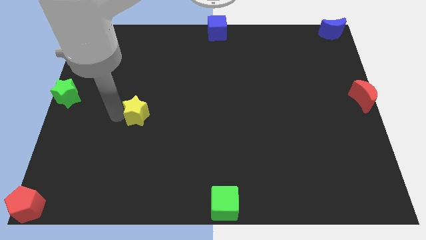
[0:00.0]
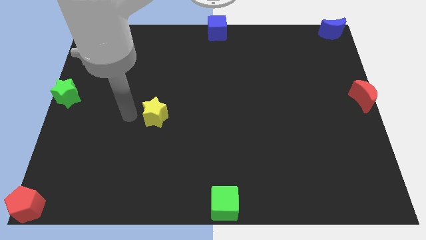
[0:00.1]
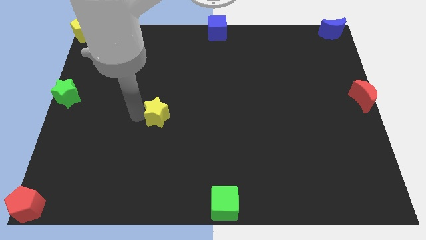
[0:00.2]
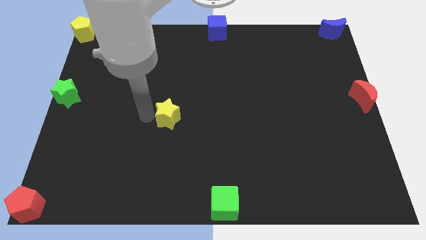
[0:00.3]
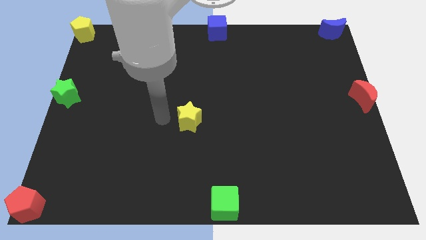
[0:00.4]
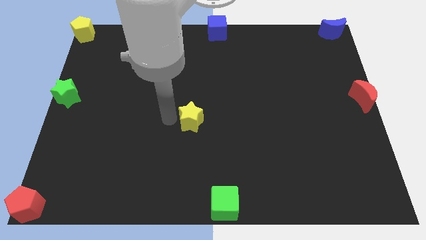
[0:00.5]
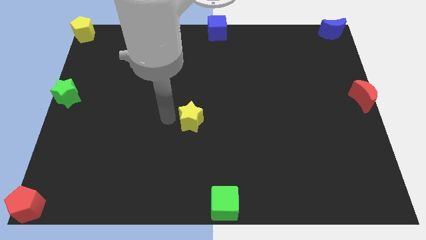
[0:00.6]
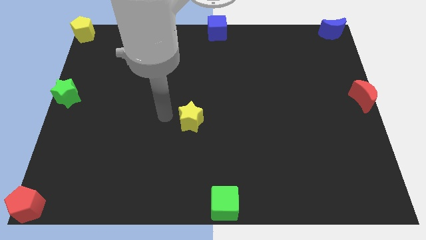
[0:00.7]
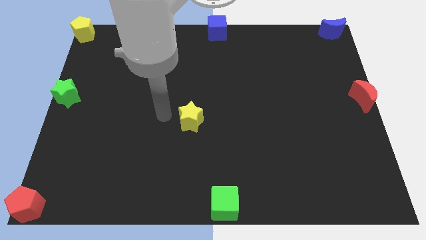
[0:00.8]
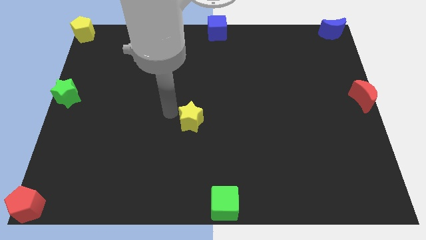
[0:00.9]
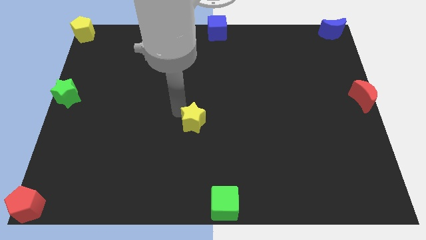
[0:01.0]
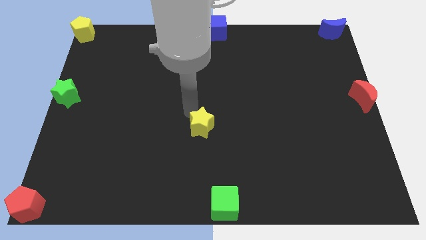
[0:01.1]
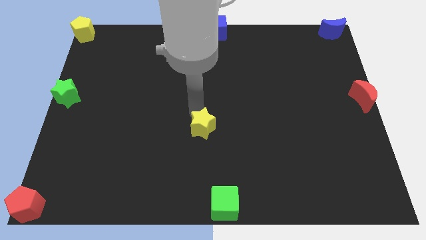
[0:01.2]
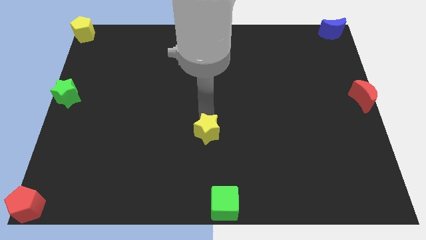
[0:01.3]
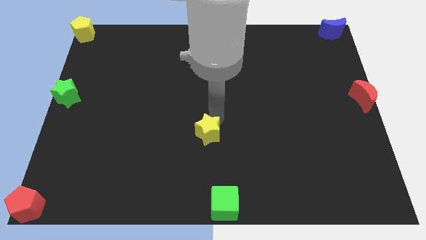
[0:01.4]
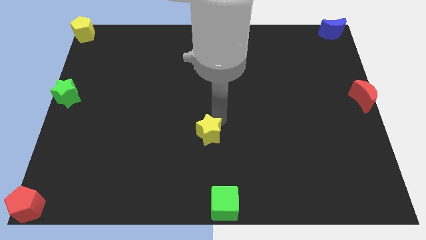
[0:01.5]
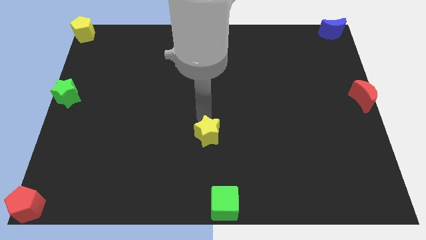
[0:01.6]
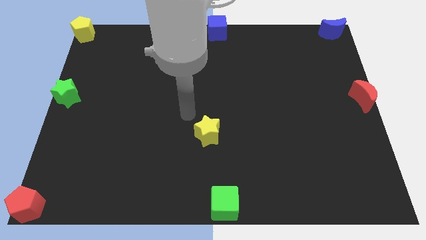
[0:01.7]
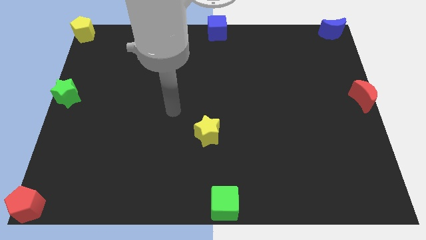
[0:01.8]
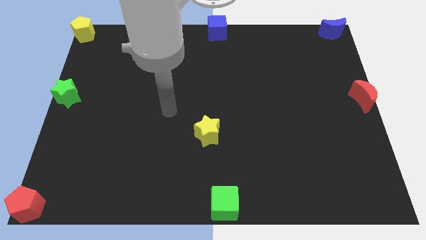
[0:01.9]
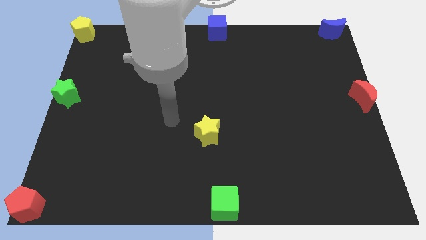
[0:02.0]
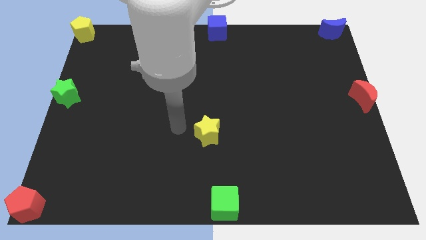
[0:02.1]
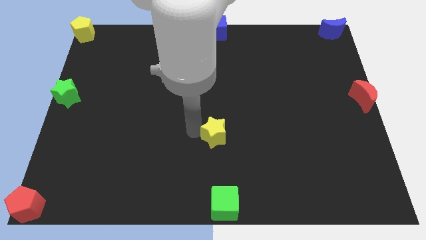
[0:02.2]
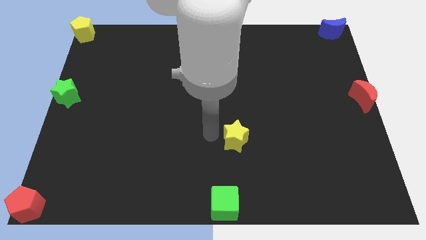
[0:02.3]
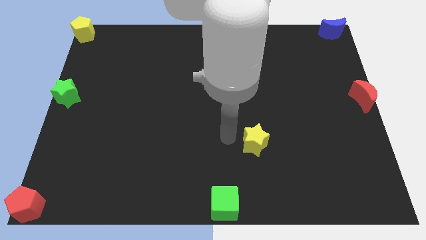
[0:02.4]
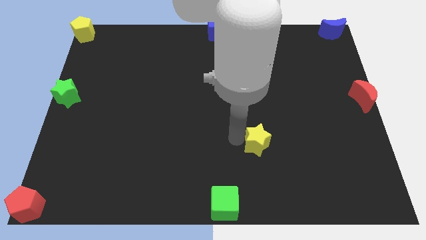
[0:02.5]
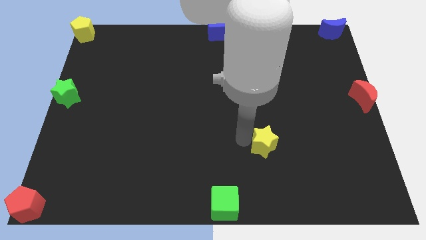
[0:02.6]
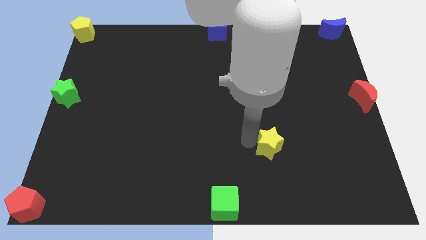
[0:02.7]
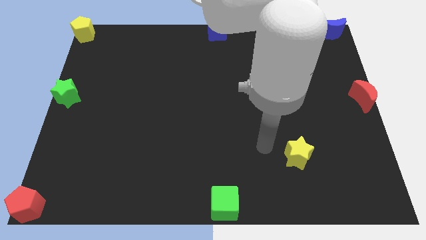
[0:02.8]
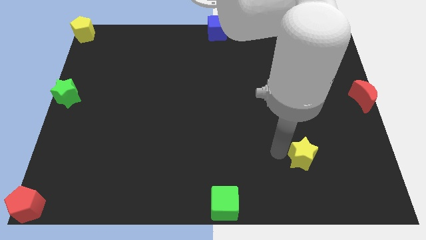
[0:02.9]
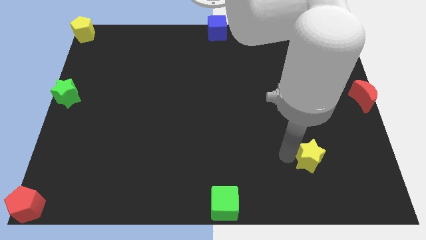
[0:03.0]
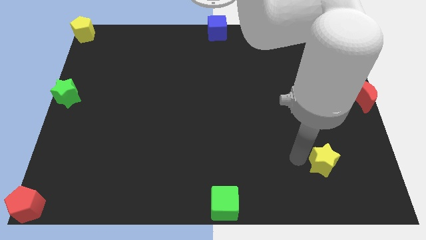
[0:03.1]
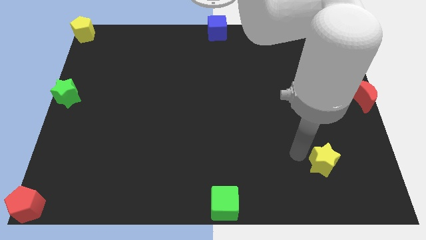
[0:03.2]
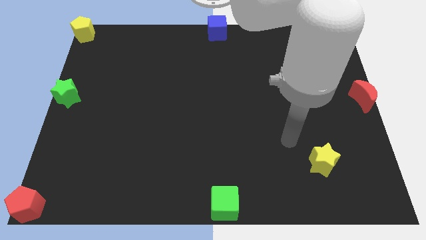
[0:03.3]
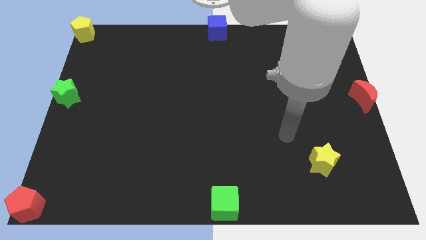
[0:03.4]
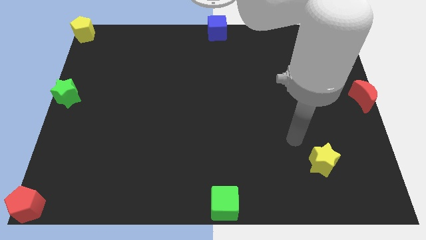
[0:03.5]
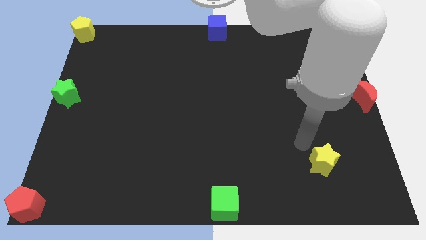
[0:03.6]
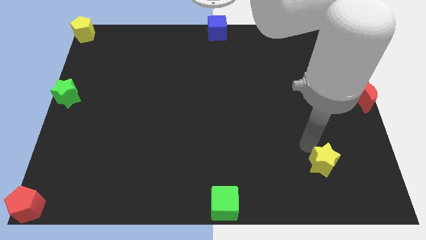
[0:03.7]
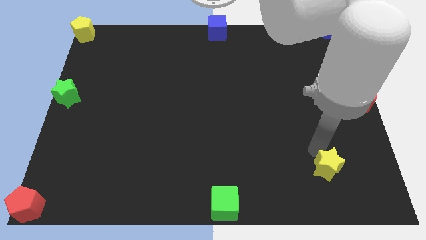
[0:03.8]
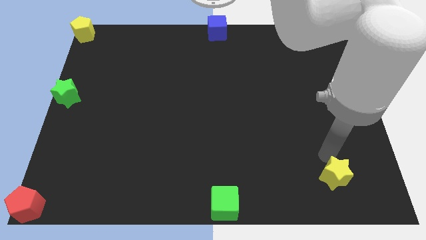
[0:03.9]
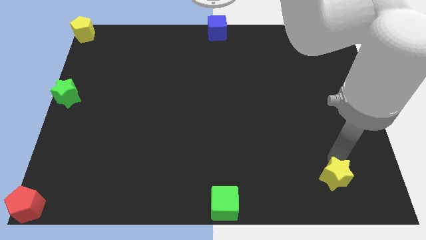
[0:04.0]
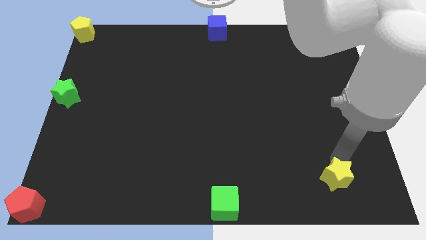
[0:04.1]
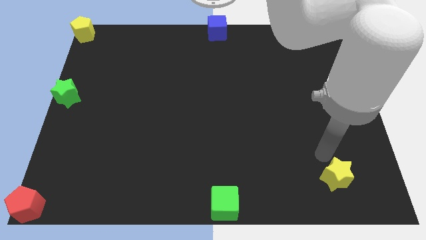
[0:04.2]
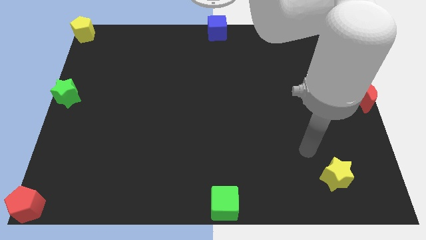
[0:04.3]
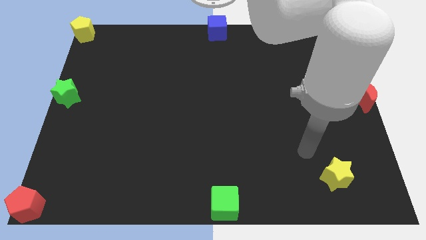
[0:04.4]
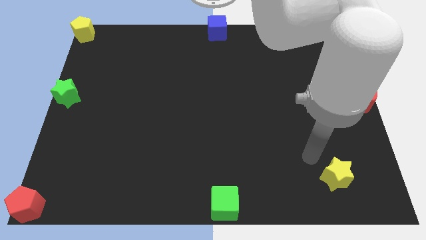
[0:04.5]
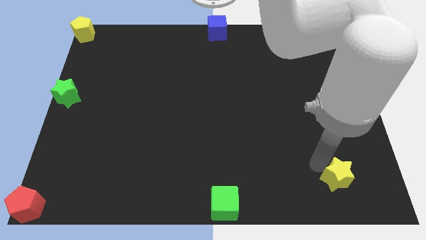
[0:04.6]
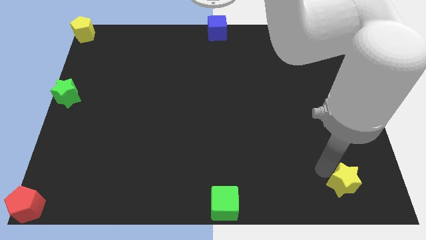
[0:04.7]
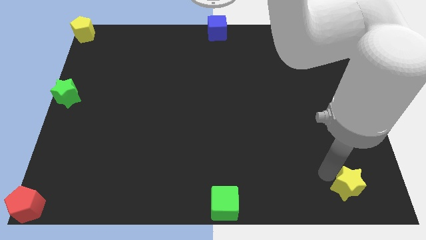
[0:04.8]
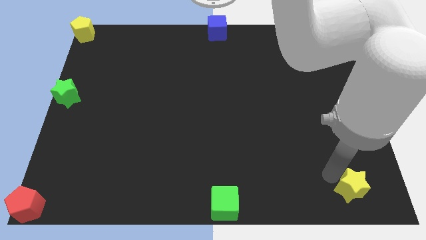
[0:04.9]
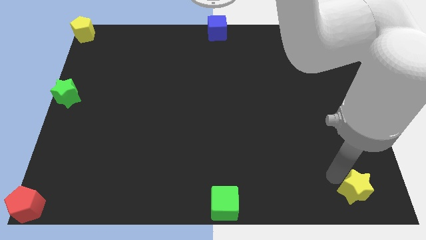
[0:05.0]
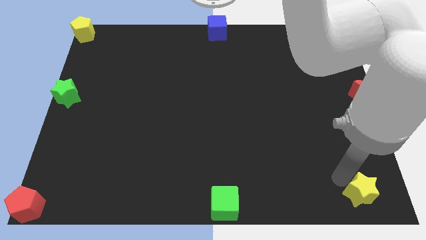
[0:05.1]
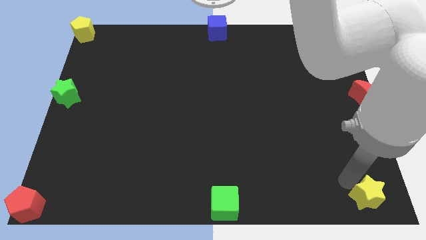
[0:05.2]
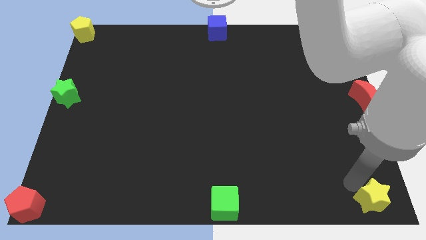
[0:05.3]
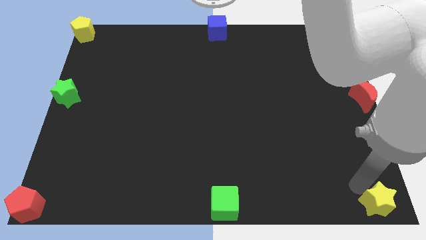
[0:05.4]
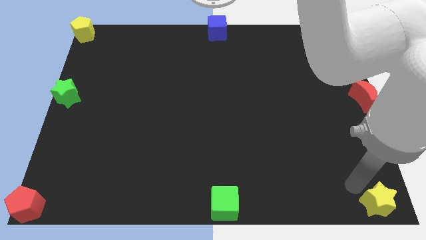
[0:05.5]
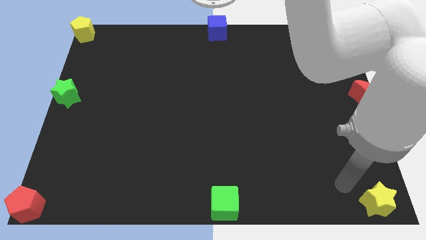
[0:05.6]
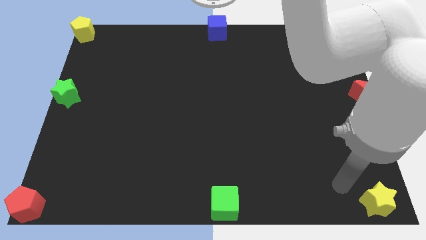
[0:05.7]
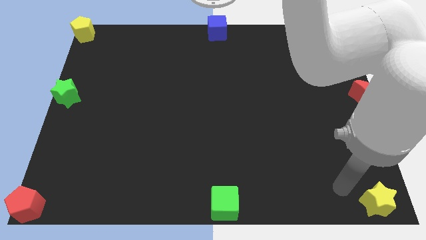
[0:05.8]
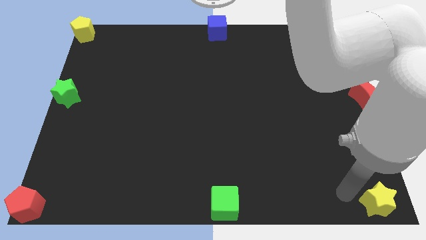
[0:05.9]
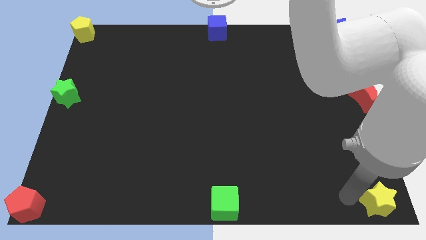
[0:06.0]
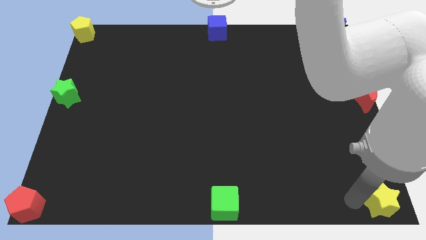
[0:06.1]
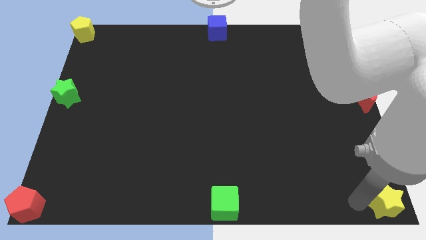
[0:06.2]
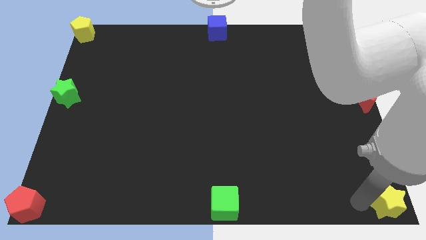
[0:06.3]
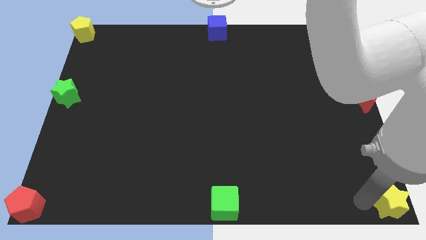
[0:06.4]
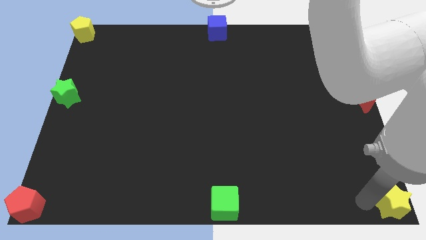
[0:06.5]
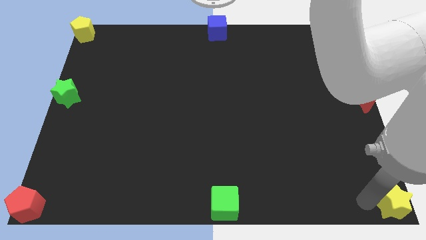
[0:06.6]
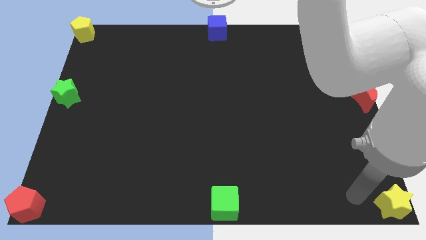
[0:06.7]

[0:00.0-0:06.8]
move the yellow star on the right bottom corner of the board

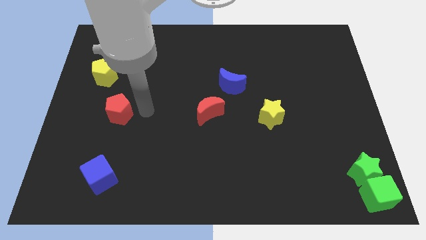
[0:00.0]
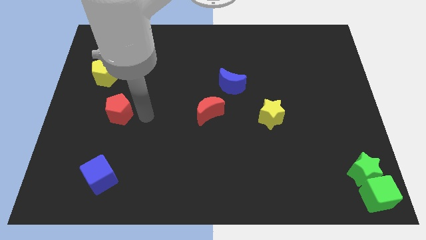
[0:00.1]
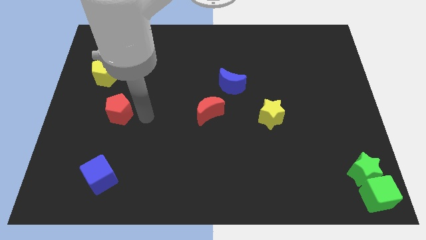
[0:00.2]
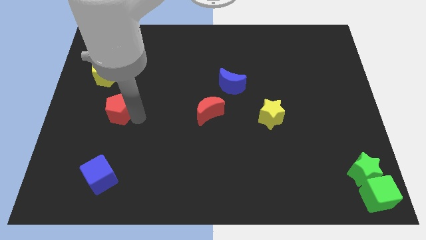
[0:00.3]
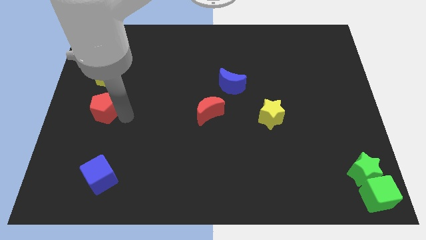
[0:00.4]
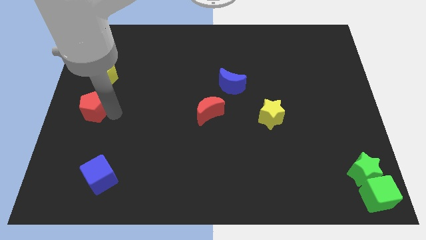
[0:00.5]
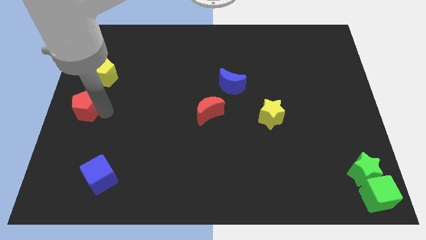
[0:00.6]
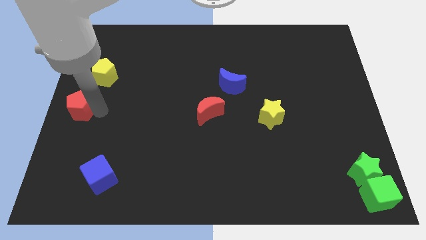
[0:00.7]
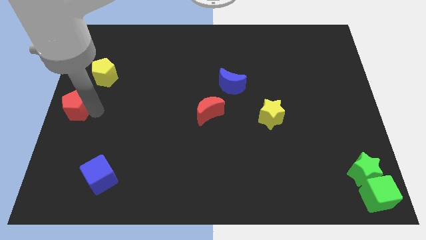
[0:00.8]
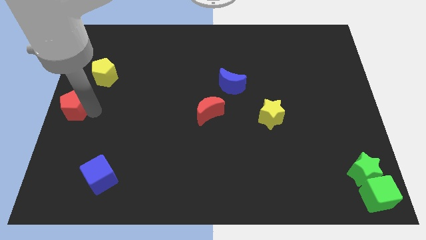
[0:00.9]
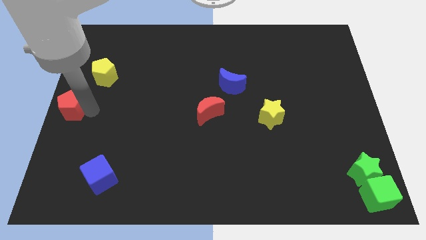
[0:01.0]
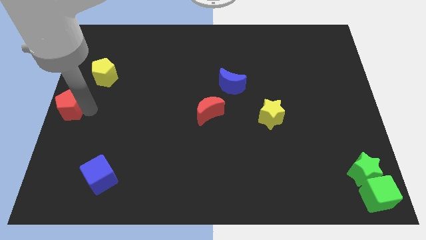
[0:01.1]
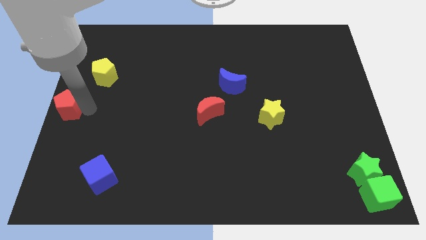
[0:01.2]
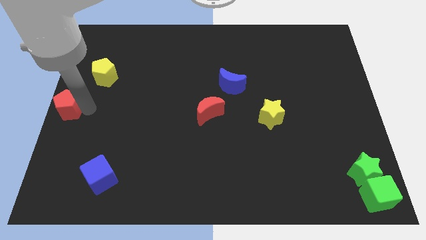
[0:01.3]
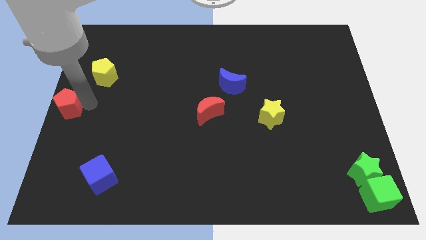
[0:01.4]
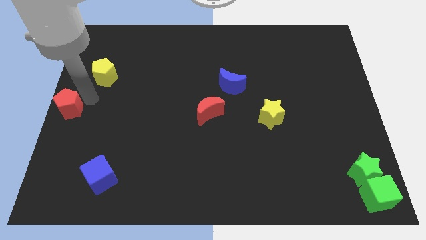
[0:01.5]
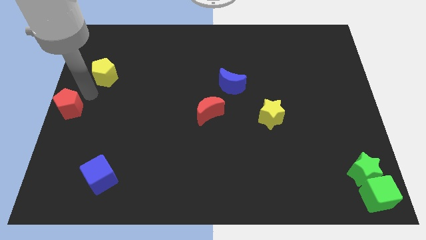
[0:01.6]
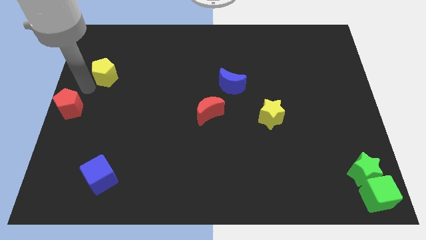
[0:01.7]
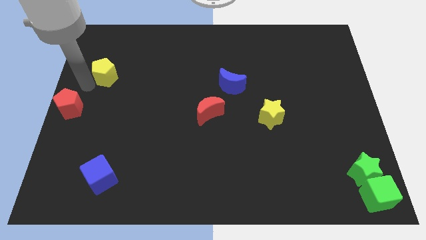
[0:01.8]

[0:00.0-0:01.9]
move the red pentagon to the left center of the board

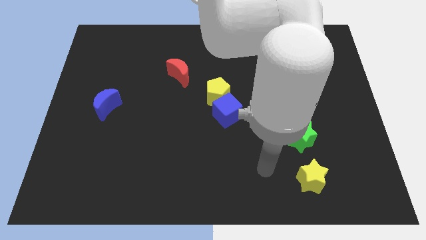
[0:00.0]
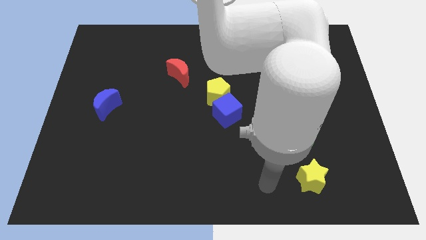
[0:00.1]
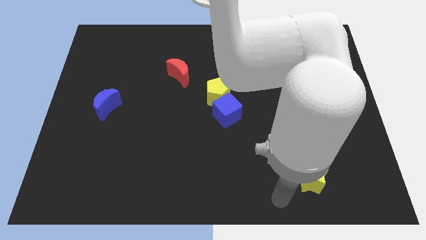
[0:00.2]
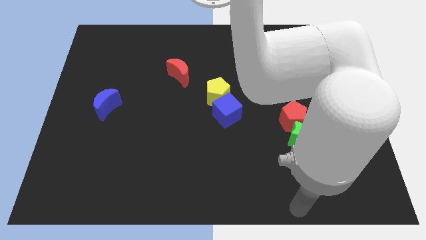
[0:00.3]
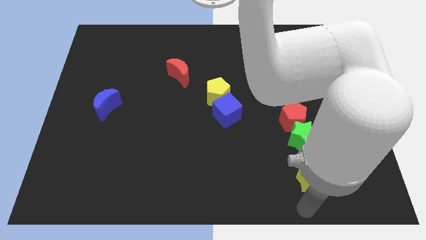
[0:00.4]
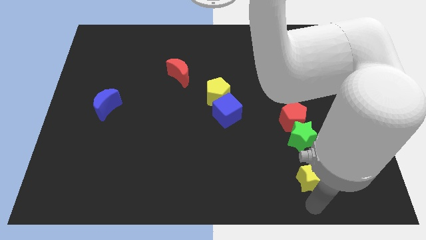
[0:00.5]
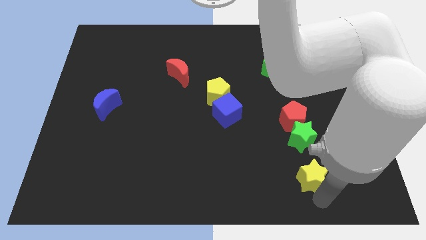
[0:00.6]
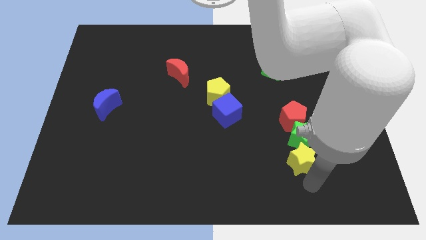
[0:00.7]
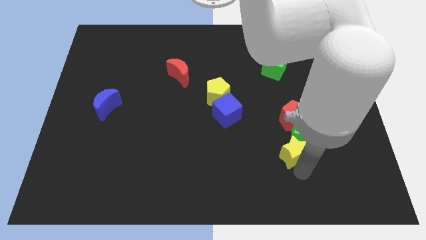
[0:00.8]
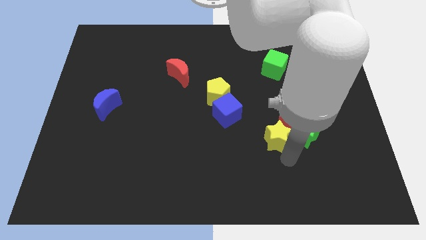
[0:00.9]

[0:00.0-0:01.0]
push the yellow star to the left of the green star
